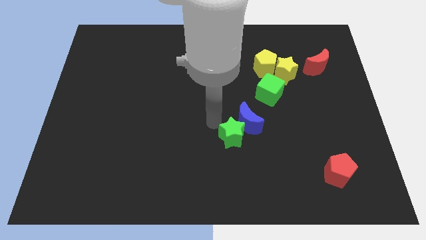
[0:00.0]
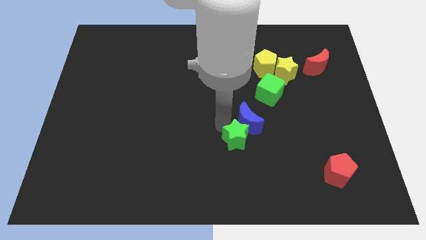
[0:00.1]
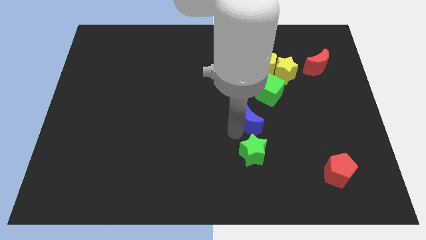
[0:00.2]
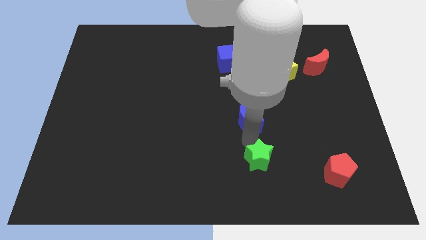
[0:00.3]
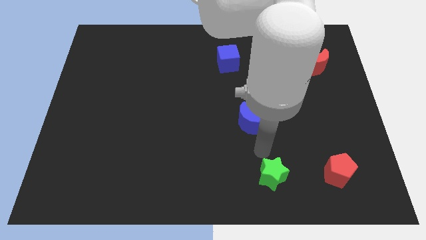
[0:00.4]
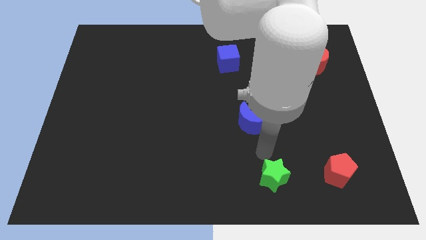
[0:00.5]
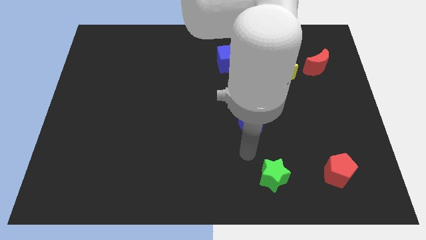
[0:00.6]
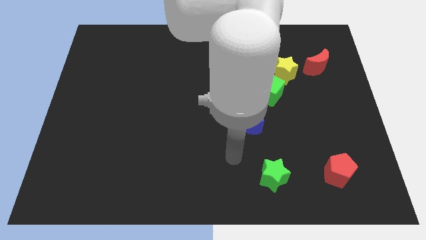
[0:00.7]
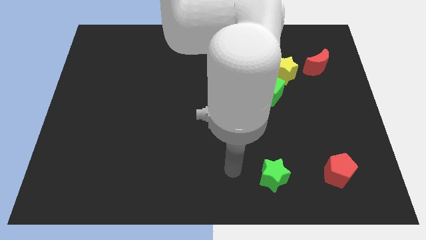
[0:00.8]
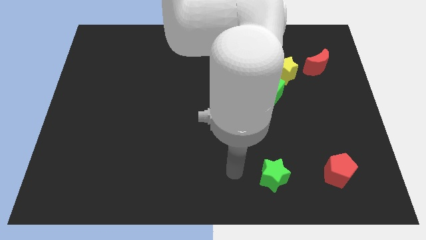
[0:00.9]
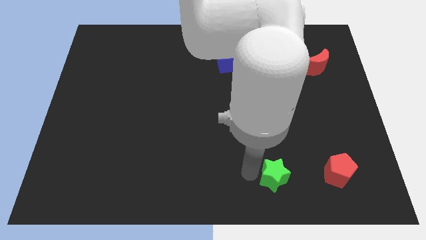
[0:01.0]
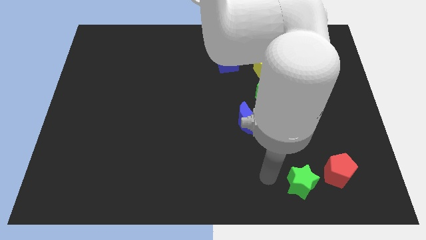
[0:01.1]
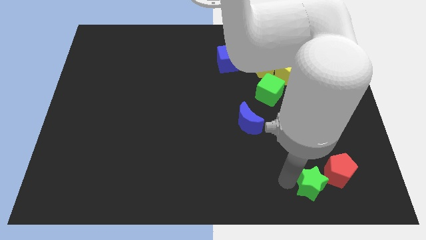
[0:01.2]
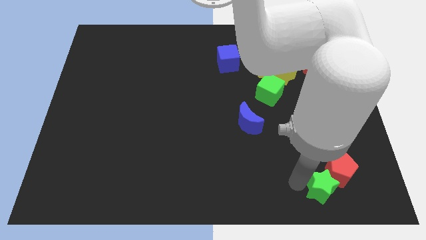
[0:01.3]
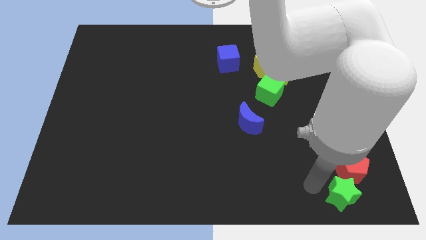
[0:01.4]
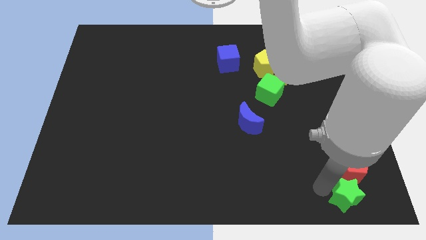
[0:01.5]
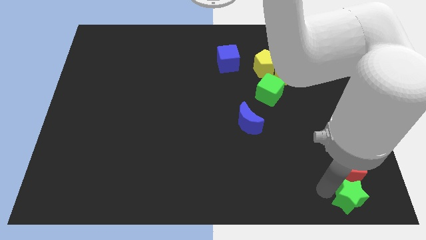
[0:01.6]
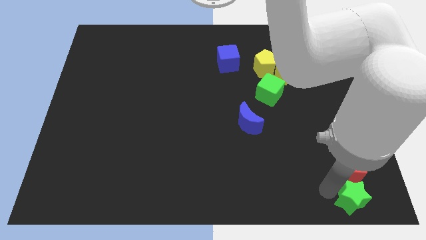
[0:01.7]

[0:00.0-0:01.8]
move the green star to the bottom of the red pentagon

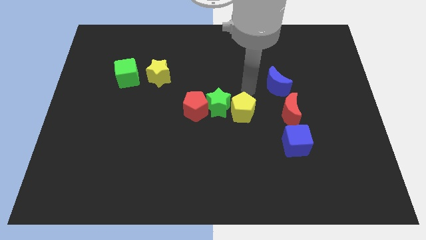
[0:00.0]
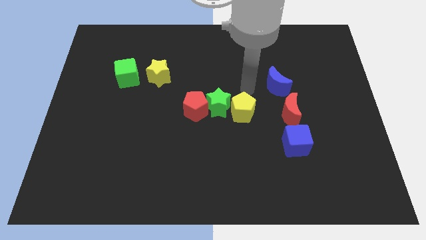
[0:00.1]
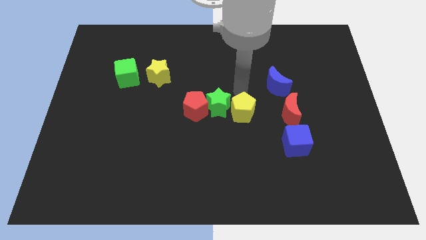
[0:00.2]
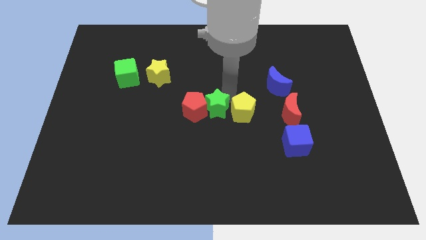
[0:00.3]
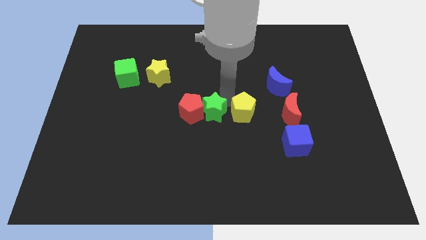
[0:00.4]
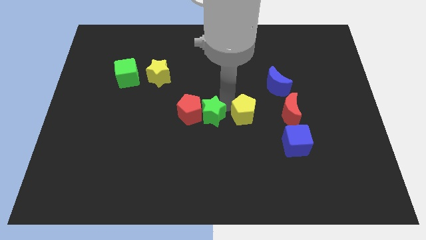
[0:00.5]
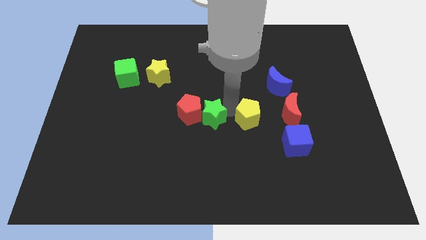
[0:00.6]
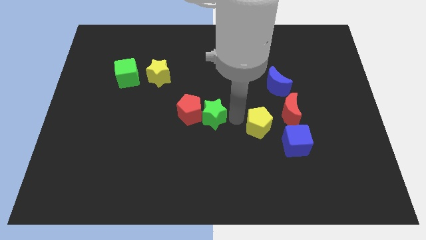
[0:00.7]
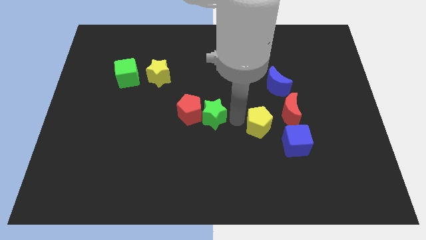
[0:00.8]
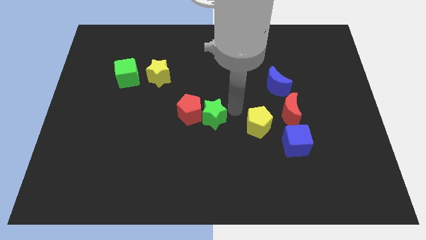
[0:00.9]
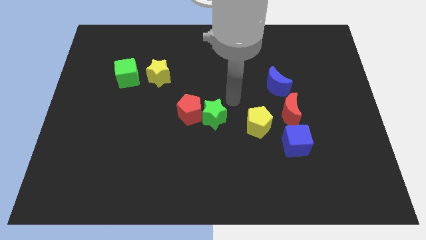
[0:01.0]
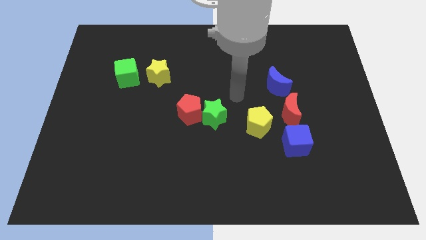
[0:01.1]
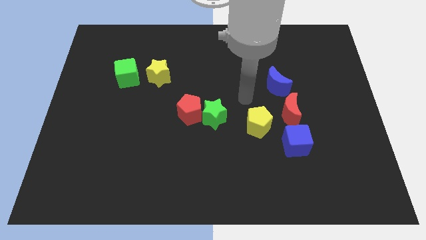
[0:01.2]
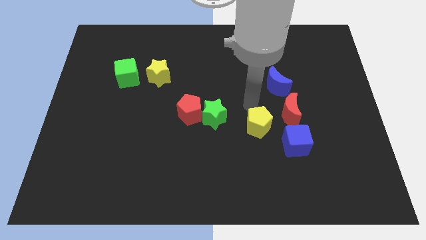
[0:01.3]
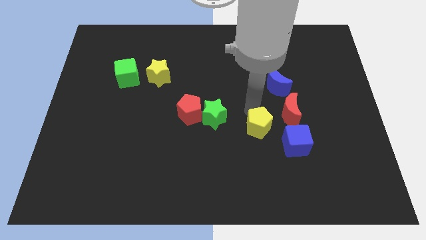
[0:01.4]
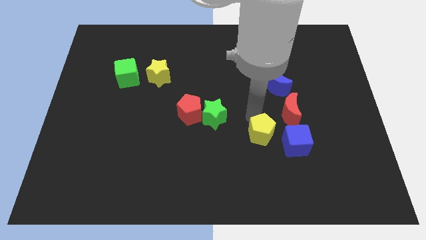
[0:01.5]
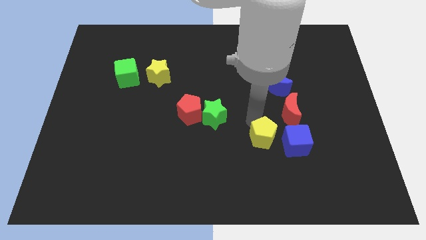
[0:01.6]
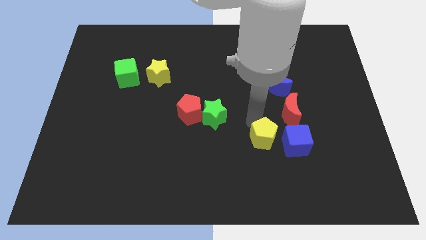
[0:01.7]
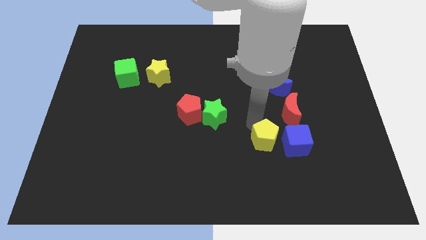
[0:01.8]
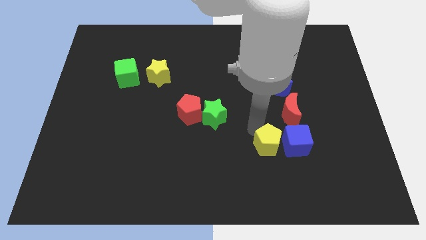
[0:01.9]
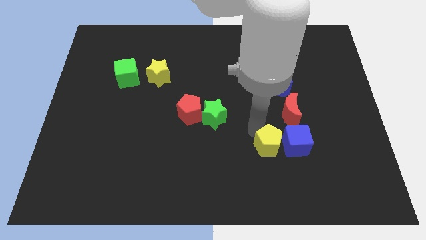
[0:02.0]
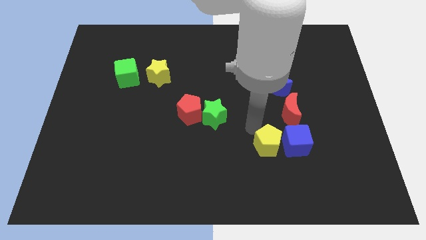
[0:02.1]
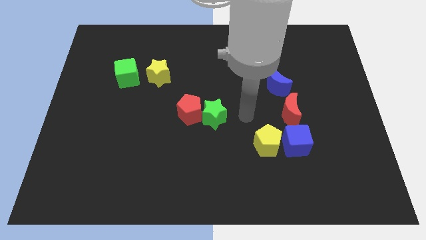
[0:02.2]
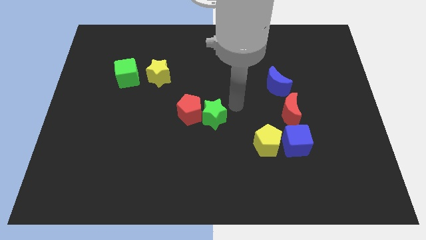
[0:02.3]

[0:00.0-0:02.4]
place the yellow pentagon to the left of the blue cube

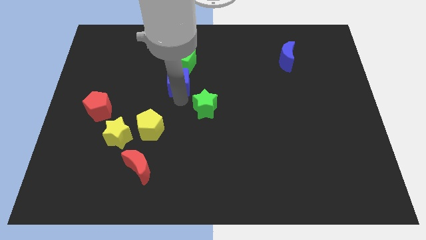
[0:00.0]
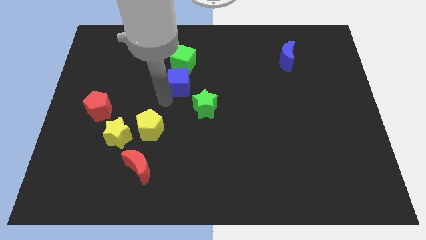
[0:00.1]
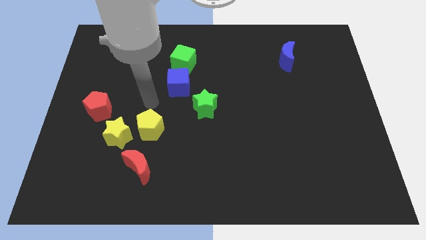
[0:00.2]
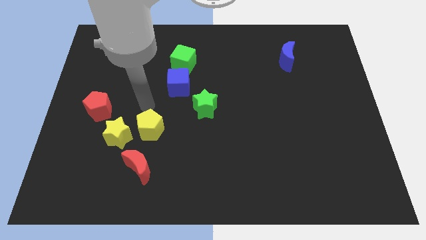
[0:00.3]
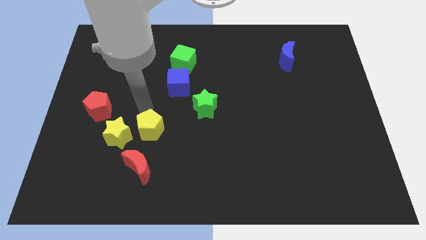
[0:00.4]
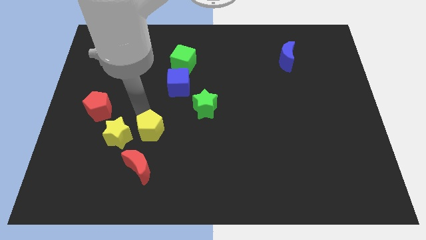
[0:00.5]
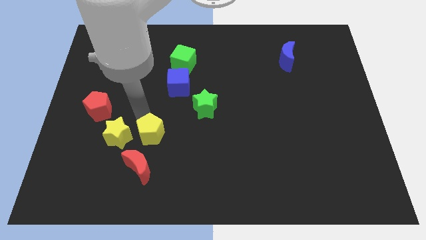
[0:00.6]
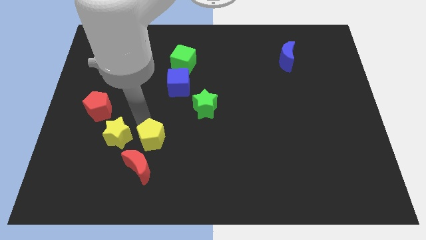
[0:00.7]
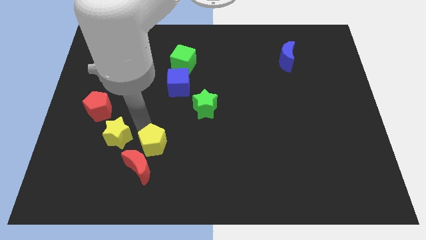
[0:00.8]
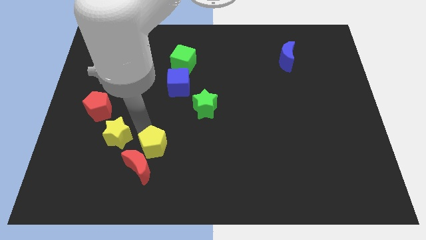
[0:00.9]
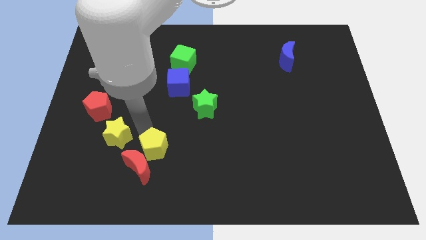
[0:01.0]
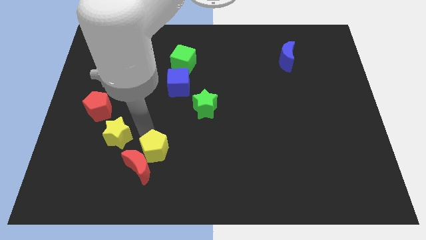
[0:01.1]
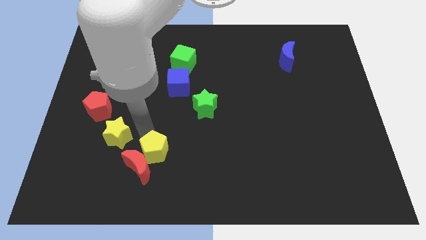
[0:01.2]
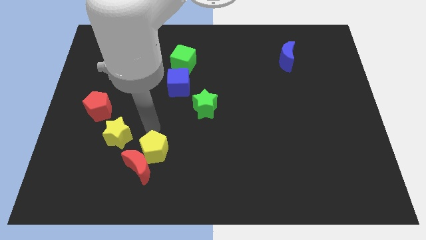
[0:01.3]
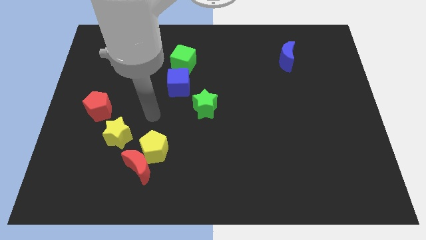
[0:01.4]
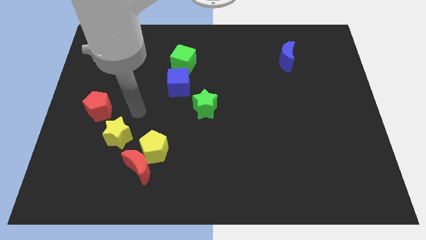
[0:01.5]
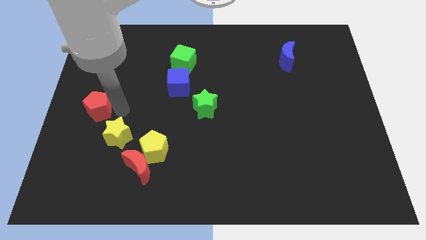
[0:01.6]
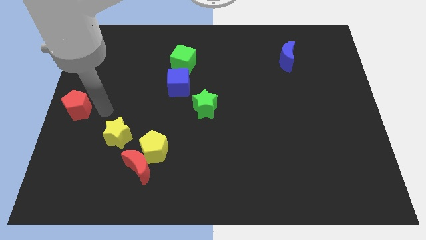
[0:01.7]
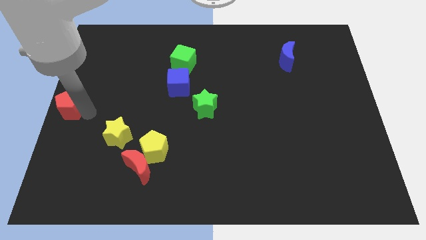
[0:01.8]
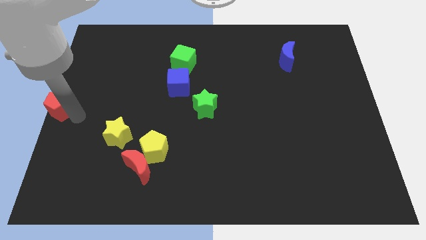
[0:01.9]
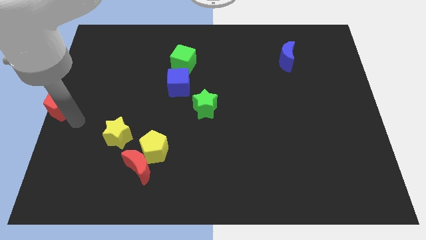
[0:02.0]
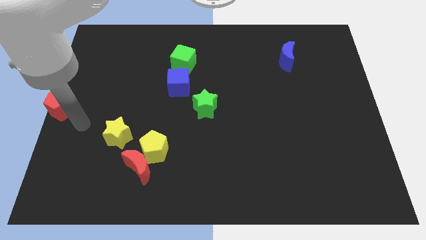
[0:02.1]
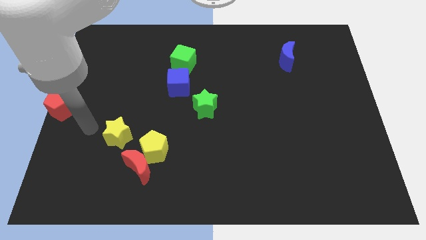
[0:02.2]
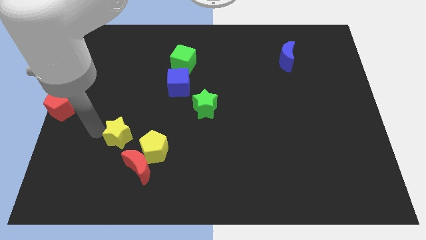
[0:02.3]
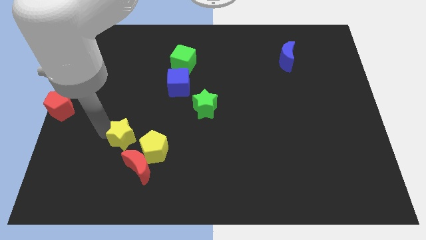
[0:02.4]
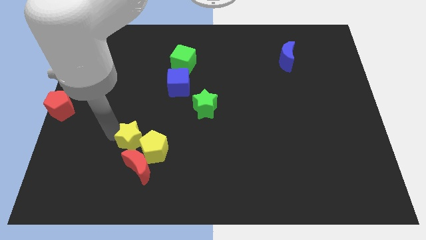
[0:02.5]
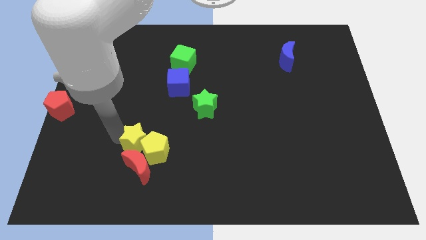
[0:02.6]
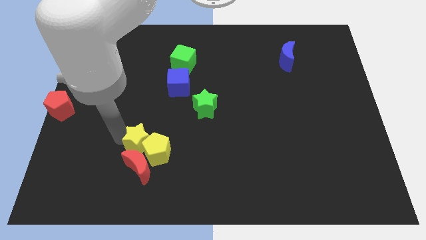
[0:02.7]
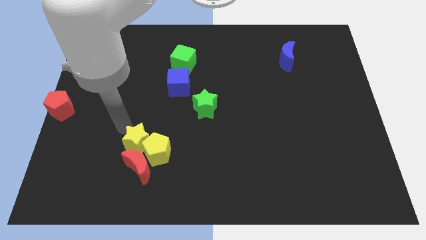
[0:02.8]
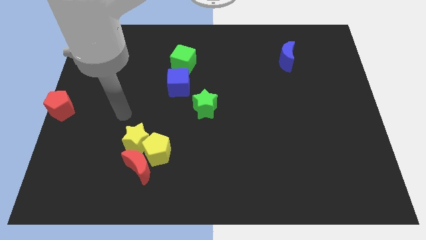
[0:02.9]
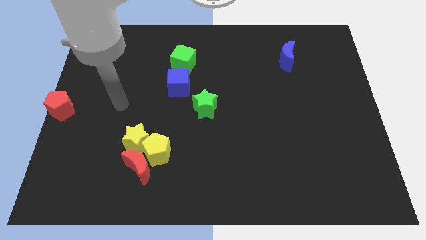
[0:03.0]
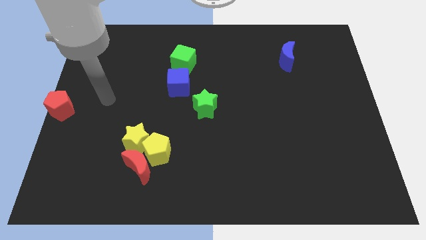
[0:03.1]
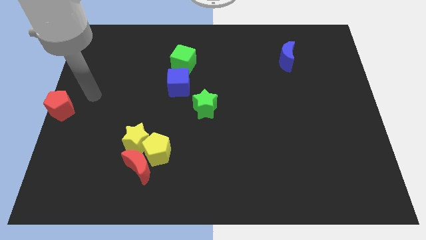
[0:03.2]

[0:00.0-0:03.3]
group up the yellow blocks and red crescent at the bottom side of the table

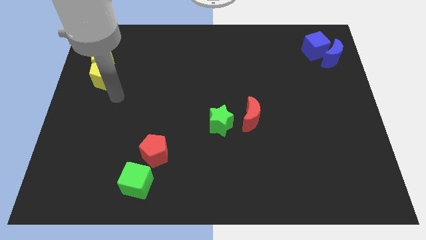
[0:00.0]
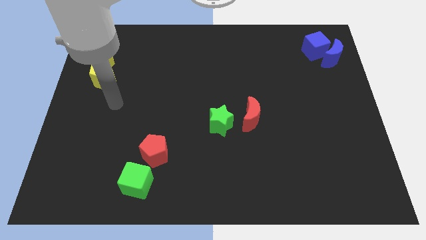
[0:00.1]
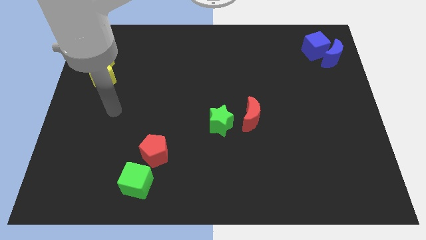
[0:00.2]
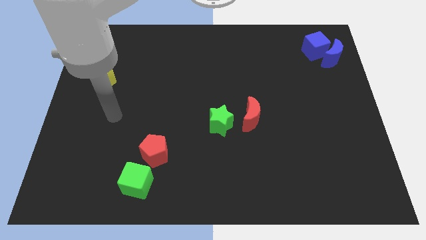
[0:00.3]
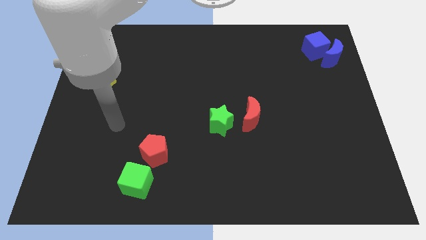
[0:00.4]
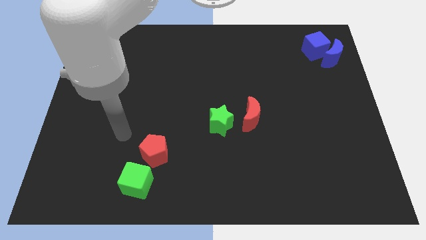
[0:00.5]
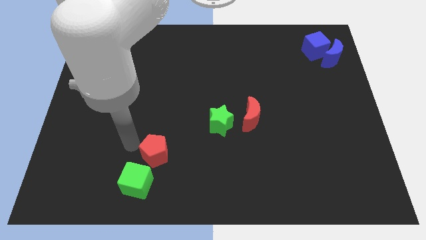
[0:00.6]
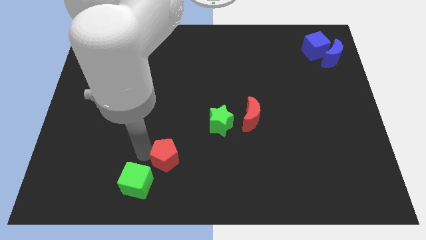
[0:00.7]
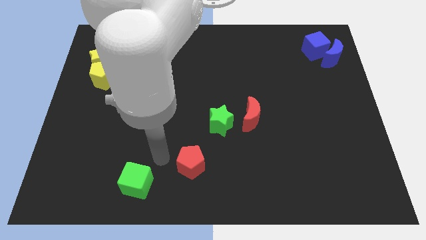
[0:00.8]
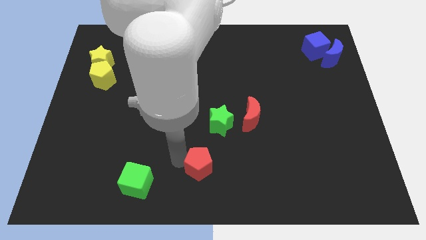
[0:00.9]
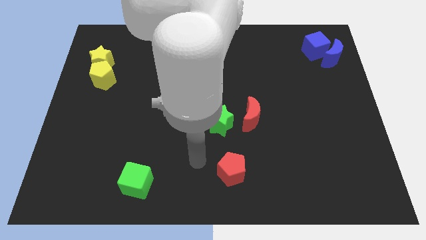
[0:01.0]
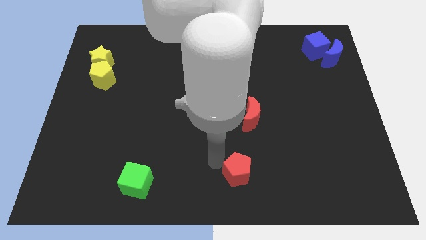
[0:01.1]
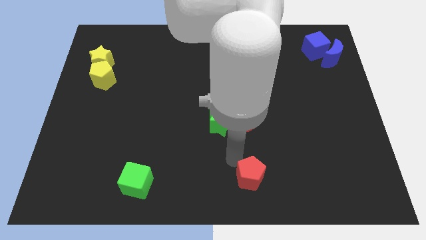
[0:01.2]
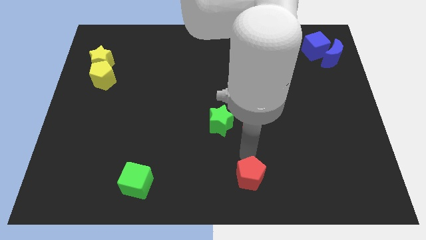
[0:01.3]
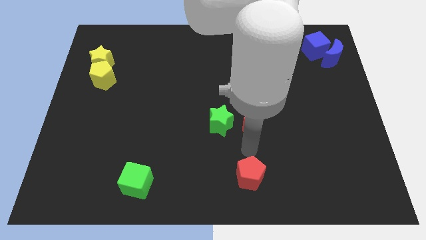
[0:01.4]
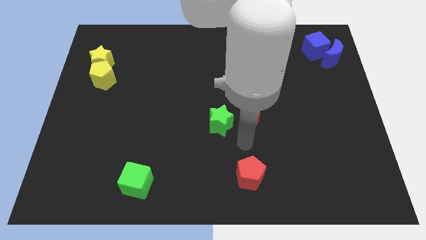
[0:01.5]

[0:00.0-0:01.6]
place the red pentagon to the right side of the green cube
